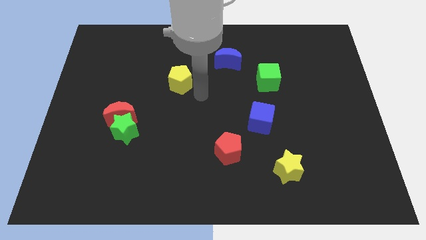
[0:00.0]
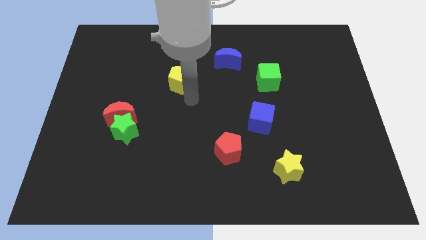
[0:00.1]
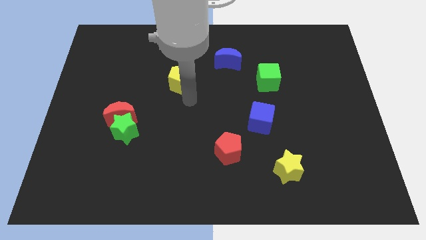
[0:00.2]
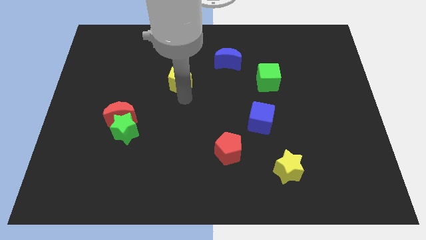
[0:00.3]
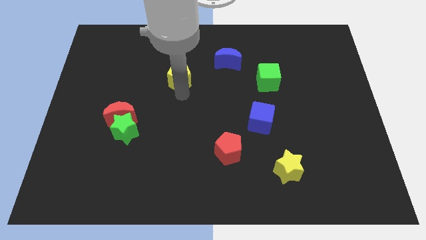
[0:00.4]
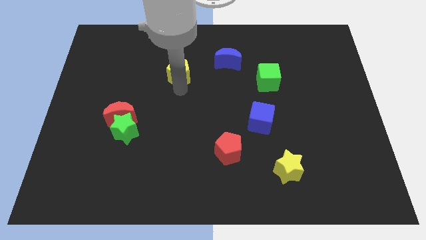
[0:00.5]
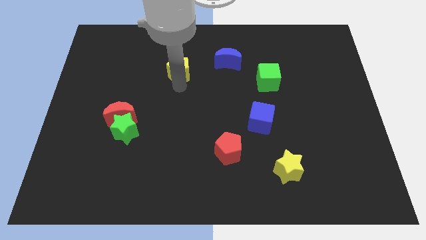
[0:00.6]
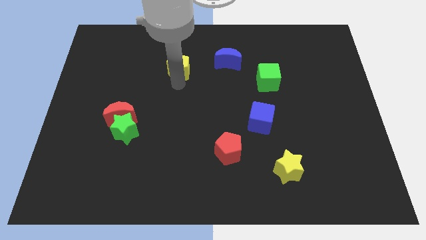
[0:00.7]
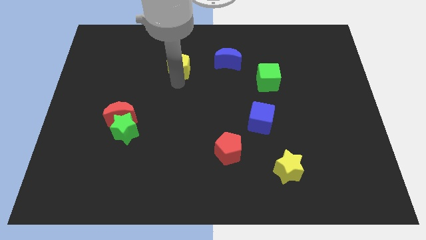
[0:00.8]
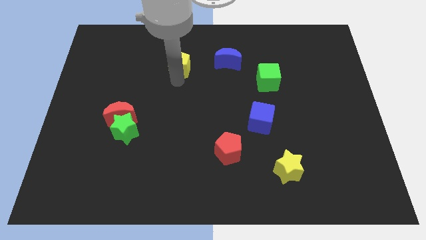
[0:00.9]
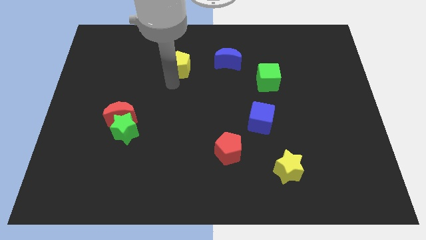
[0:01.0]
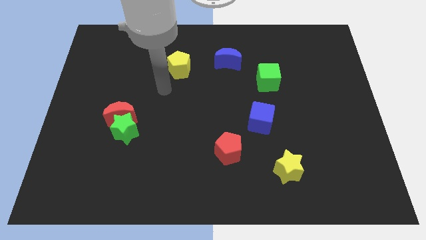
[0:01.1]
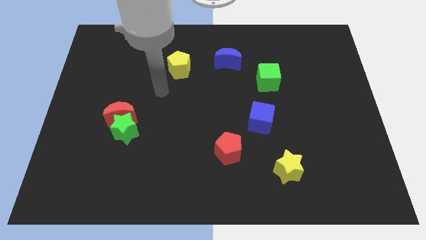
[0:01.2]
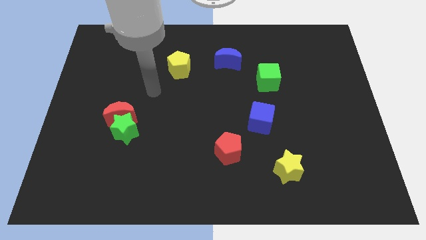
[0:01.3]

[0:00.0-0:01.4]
move the yellow pentagon left to the blue crescent

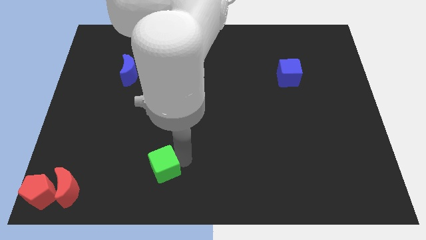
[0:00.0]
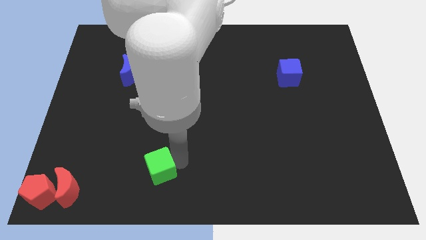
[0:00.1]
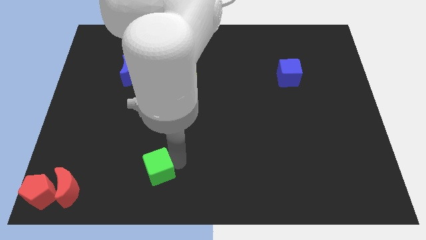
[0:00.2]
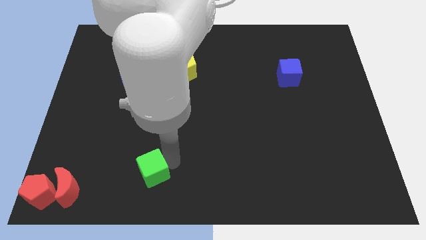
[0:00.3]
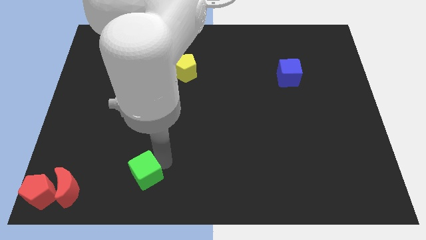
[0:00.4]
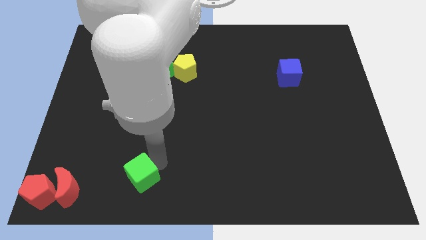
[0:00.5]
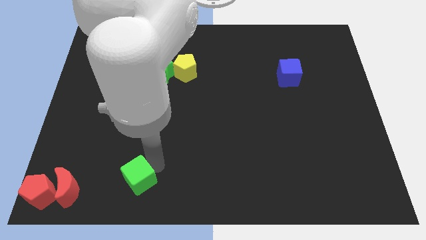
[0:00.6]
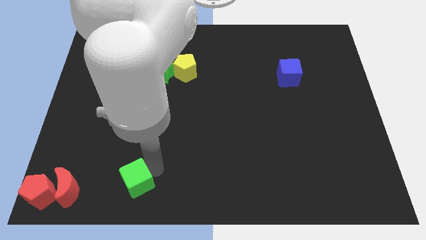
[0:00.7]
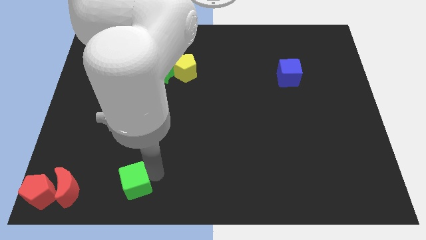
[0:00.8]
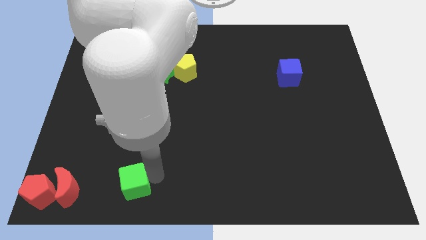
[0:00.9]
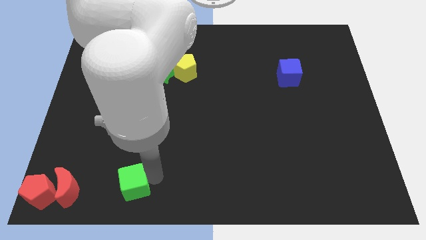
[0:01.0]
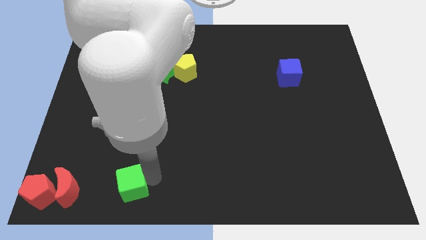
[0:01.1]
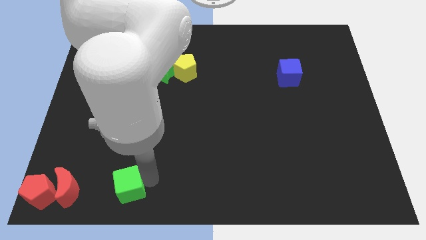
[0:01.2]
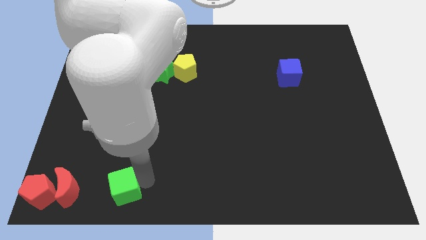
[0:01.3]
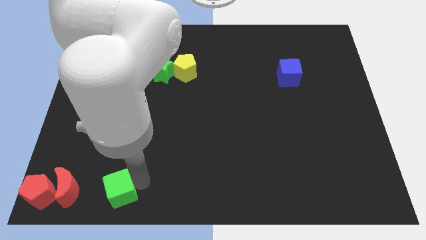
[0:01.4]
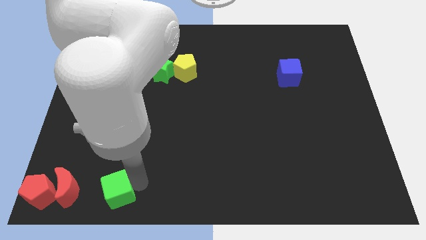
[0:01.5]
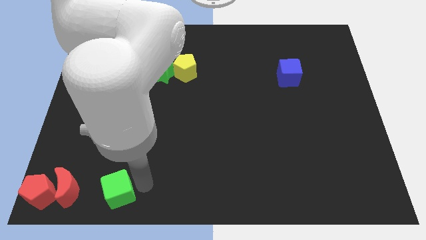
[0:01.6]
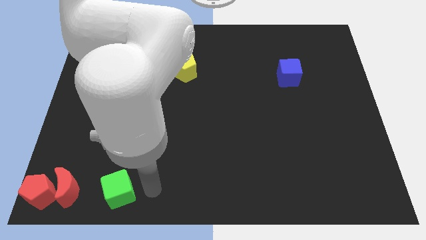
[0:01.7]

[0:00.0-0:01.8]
move the green cube to the right side of the red crescent

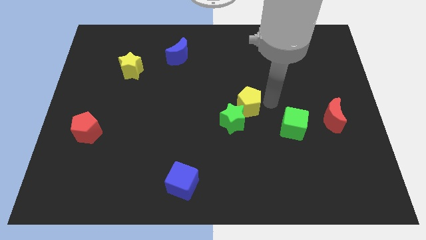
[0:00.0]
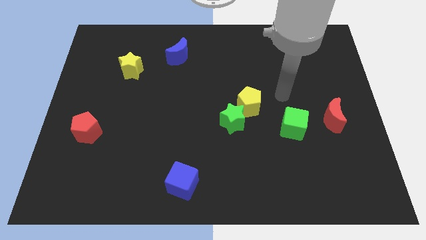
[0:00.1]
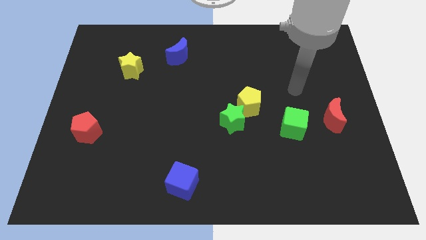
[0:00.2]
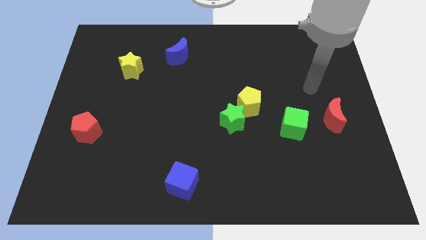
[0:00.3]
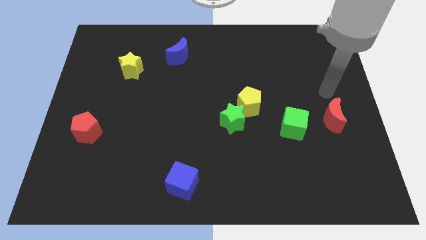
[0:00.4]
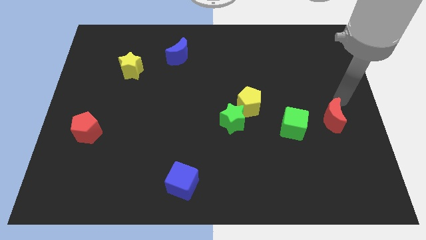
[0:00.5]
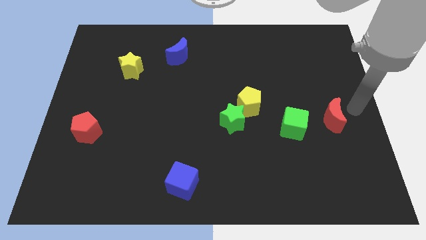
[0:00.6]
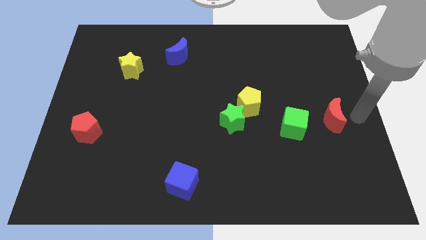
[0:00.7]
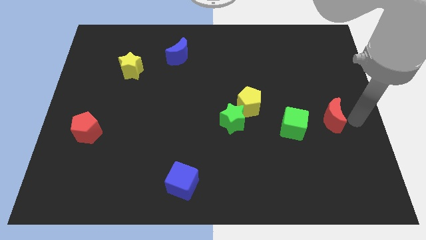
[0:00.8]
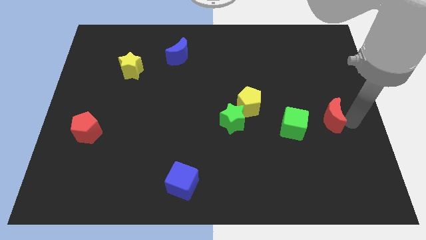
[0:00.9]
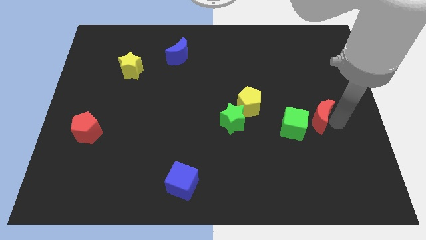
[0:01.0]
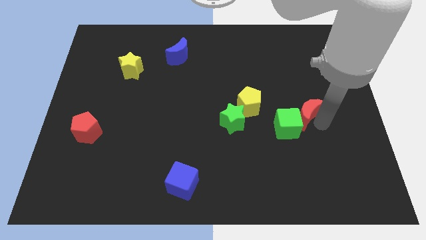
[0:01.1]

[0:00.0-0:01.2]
push the red crescent into the green cube

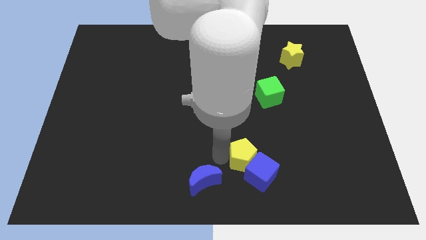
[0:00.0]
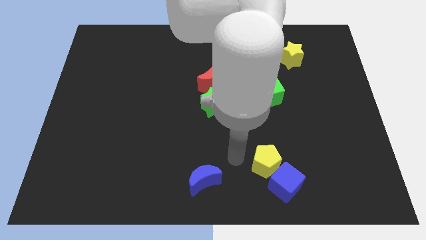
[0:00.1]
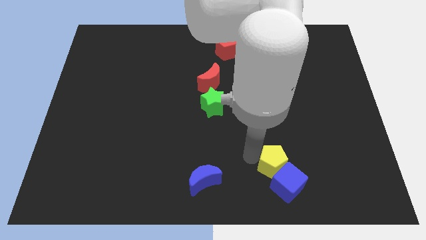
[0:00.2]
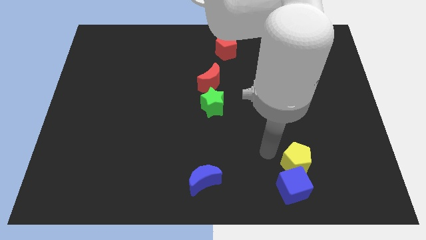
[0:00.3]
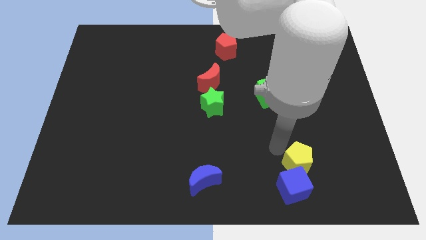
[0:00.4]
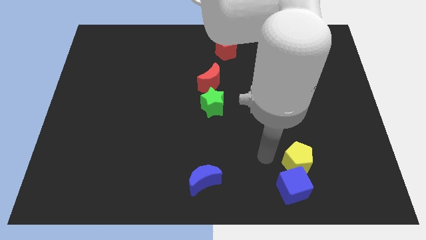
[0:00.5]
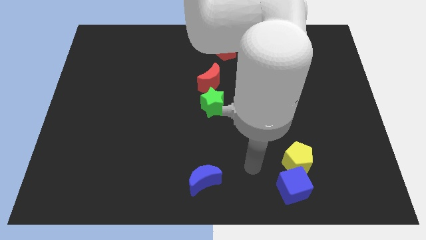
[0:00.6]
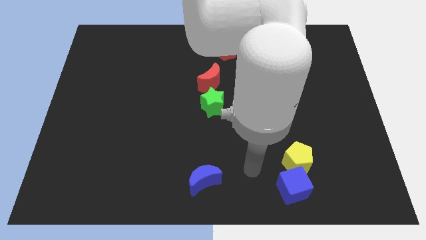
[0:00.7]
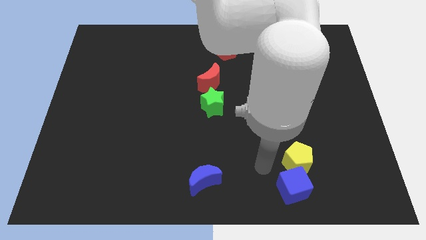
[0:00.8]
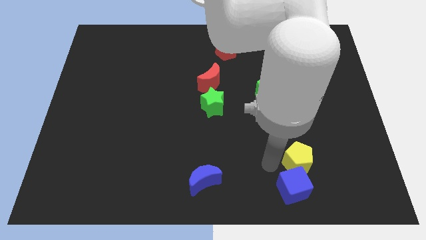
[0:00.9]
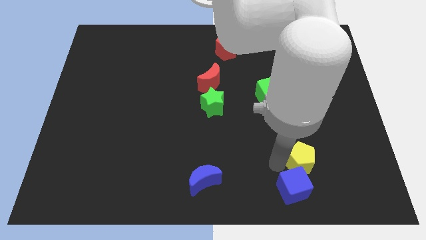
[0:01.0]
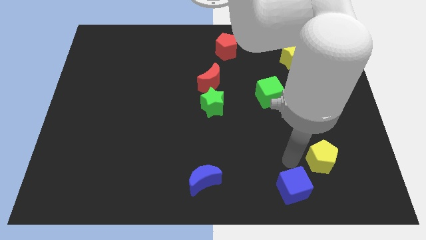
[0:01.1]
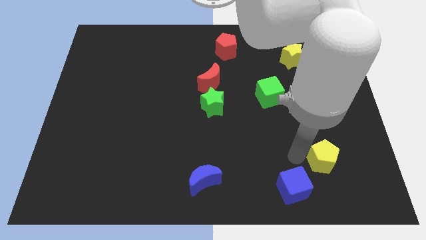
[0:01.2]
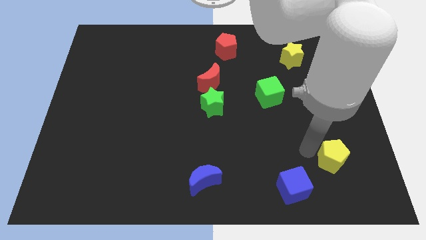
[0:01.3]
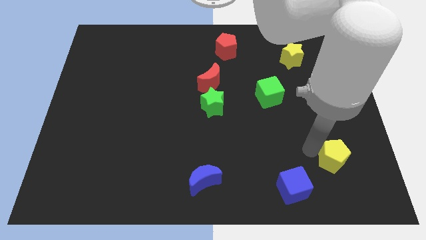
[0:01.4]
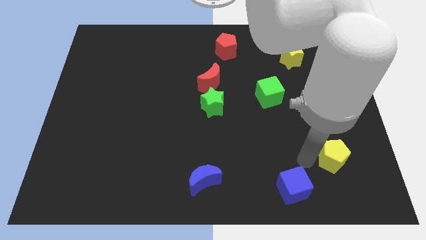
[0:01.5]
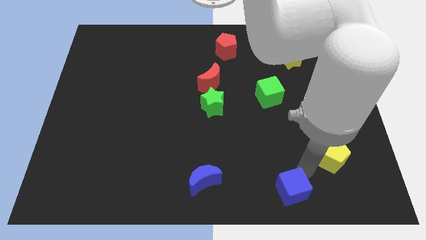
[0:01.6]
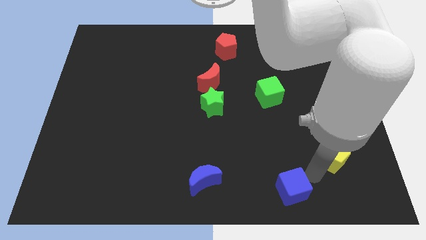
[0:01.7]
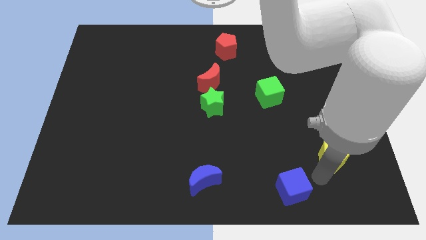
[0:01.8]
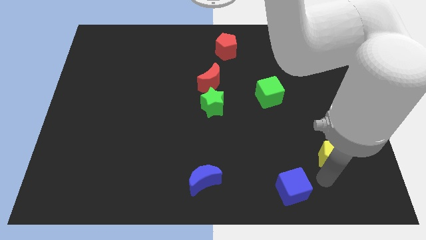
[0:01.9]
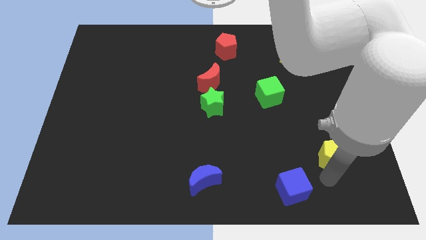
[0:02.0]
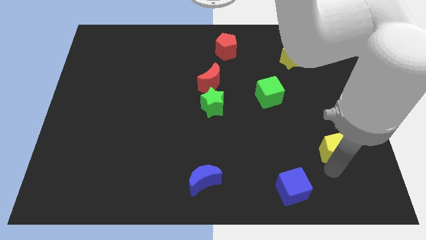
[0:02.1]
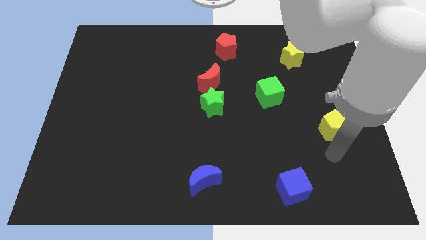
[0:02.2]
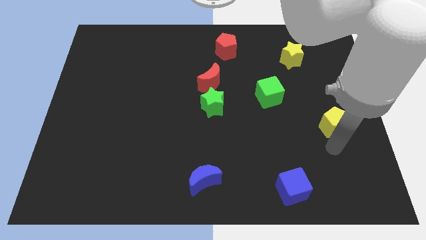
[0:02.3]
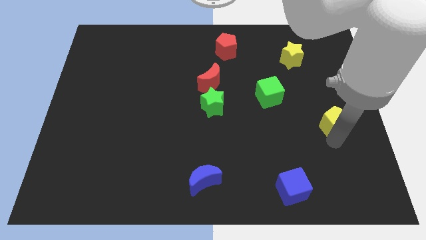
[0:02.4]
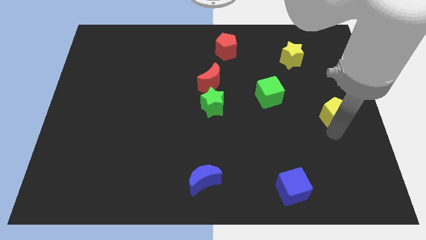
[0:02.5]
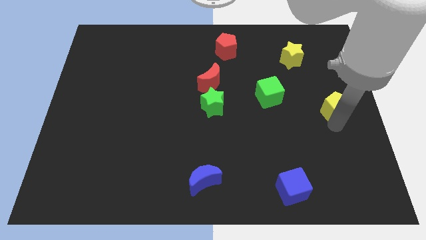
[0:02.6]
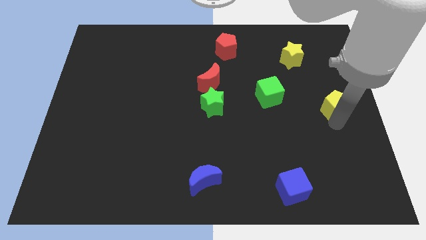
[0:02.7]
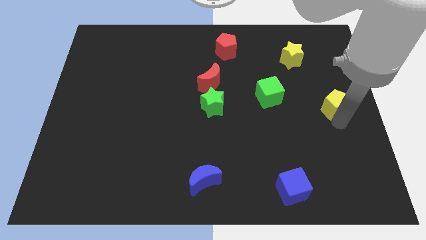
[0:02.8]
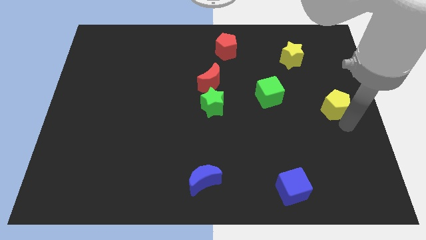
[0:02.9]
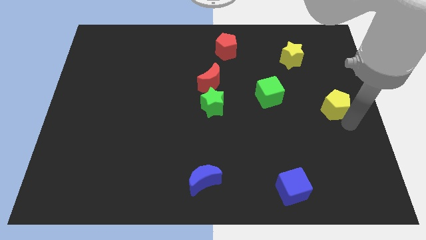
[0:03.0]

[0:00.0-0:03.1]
separate yellow pentagon from blue cube

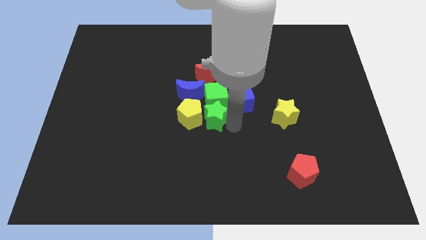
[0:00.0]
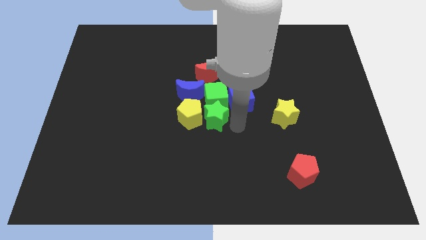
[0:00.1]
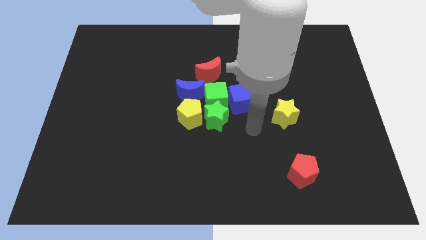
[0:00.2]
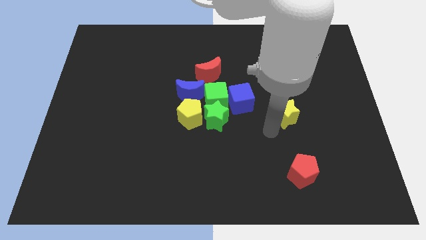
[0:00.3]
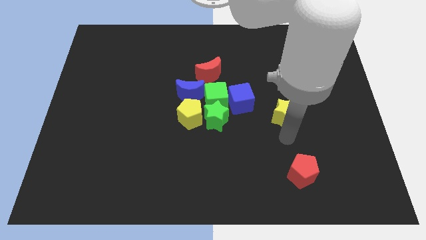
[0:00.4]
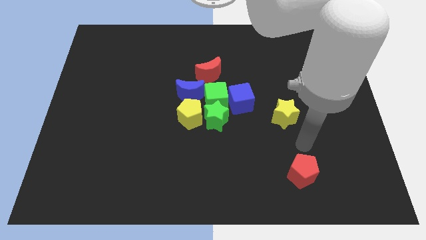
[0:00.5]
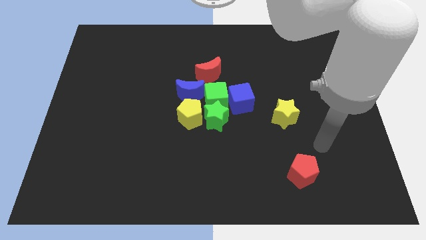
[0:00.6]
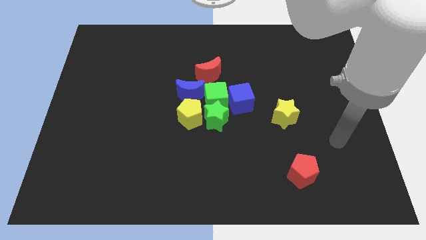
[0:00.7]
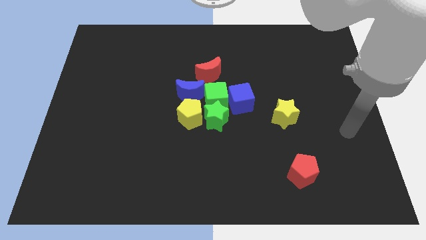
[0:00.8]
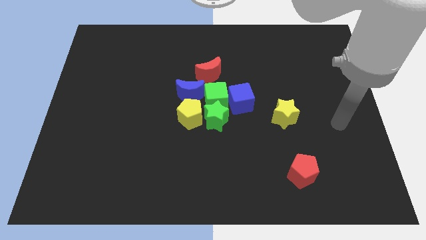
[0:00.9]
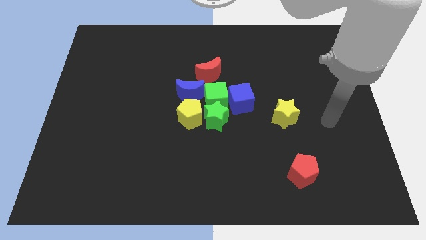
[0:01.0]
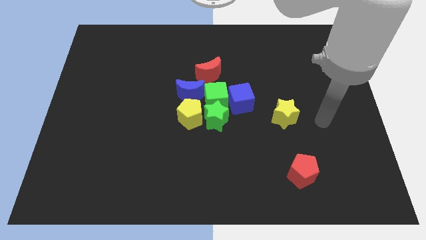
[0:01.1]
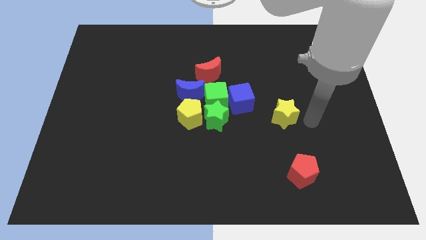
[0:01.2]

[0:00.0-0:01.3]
place the arm right to the yellow star

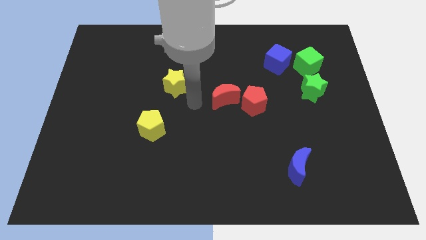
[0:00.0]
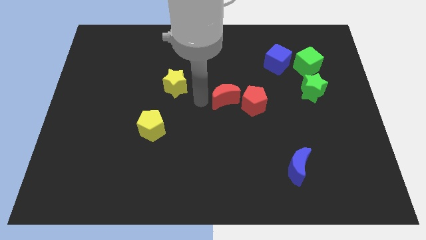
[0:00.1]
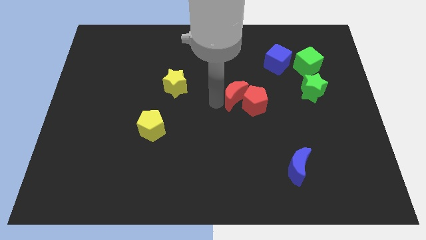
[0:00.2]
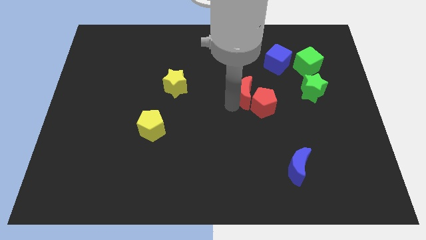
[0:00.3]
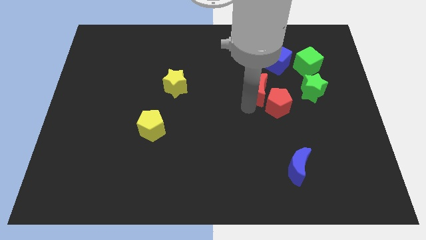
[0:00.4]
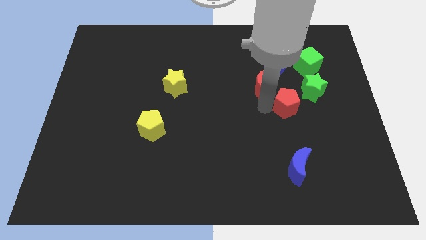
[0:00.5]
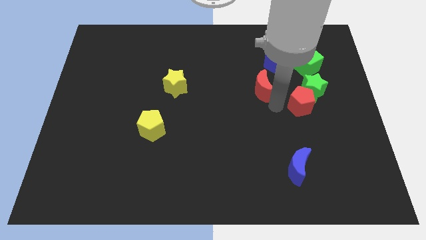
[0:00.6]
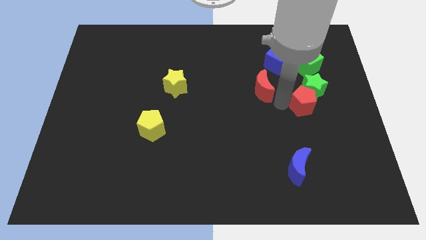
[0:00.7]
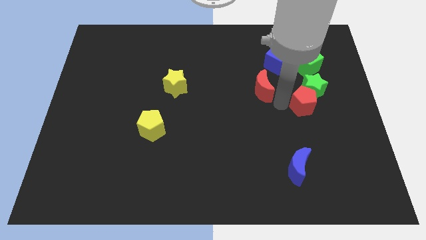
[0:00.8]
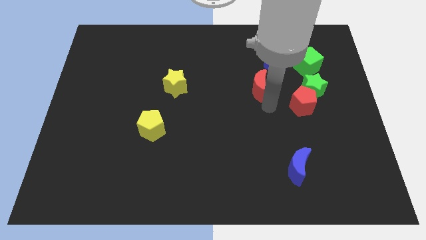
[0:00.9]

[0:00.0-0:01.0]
move red pentagon close to the green star